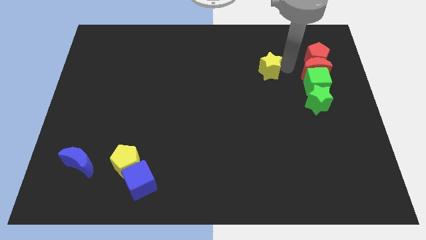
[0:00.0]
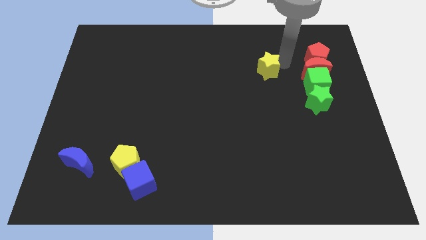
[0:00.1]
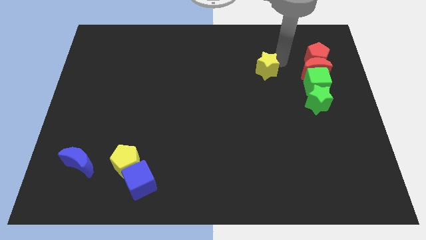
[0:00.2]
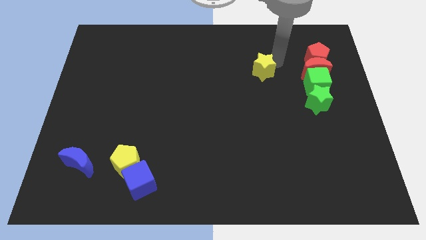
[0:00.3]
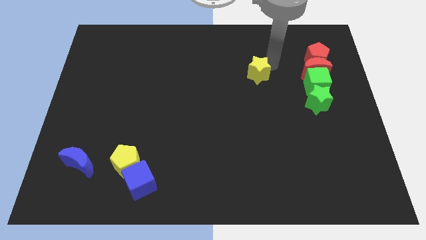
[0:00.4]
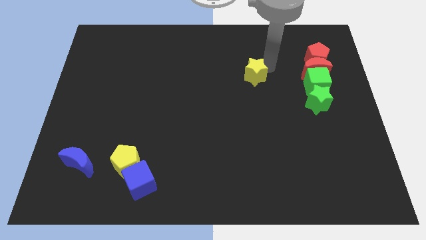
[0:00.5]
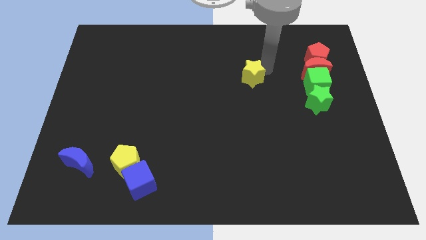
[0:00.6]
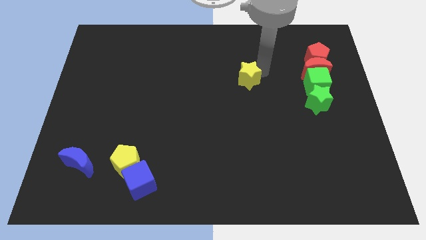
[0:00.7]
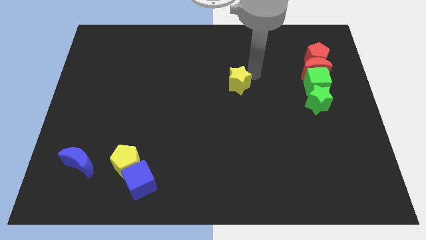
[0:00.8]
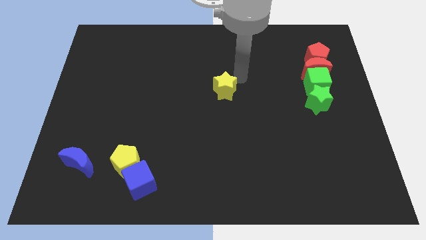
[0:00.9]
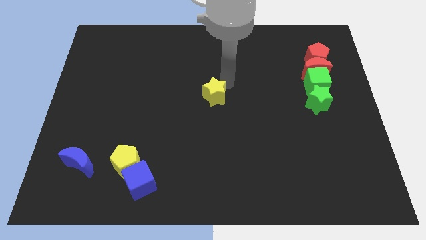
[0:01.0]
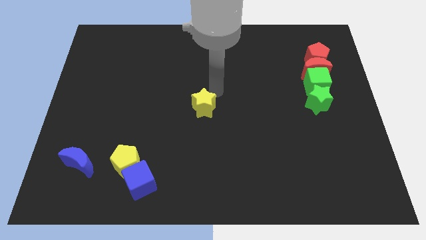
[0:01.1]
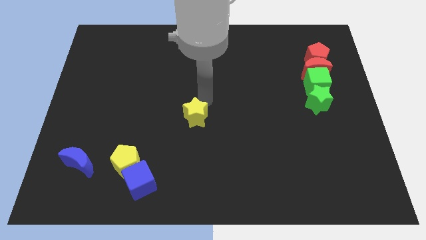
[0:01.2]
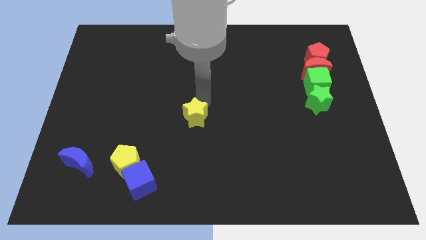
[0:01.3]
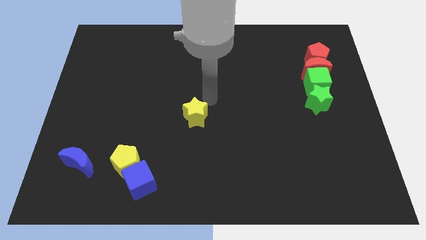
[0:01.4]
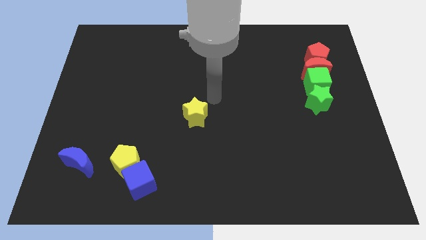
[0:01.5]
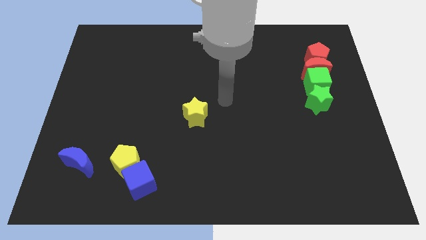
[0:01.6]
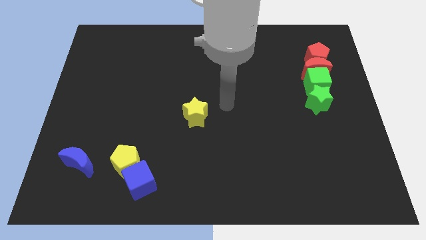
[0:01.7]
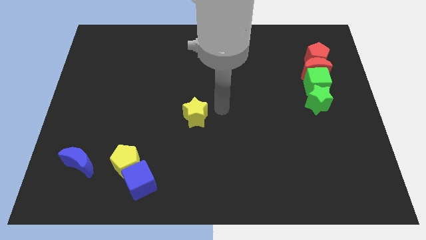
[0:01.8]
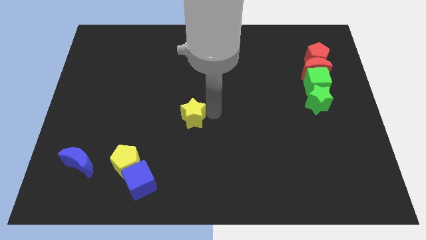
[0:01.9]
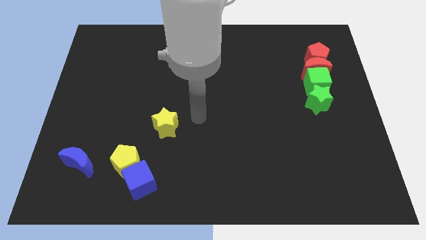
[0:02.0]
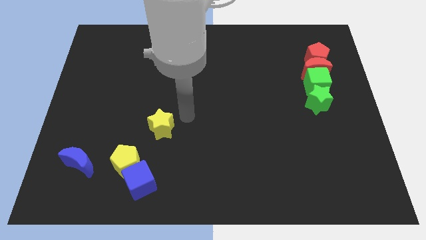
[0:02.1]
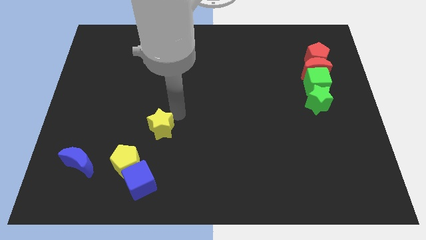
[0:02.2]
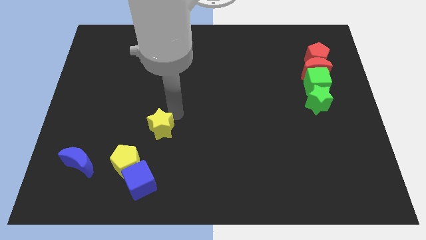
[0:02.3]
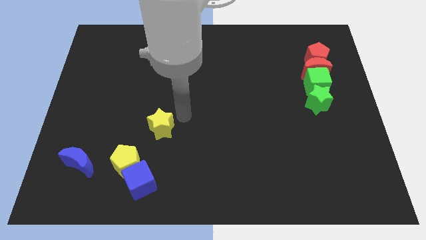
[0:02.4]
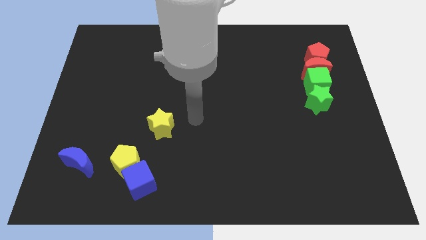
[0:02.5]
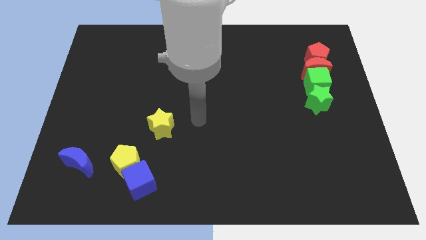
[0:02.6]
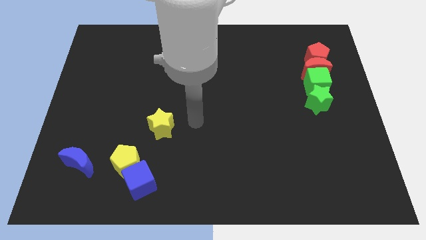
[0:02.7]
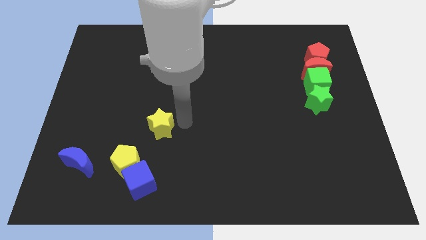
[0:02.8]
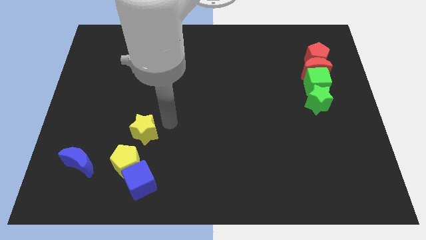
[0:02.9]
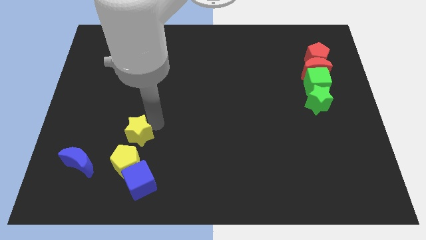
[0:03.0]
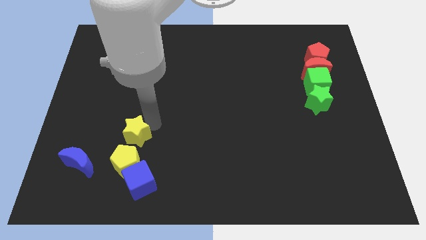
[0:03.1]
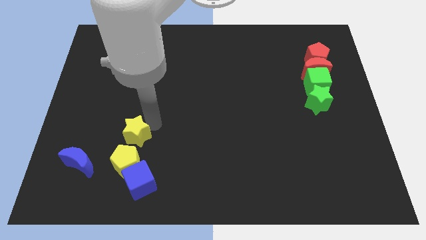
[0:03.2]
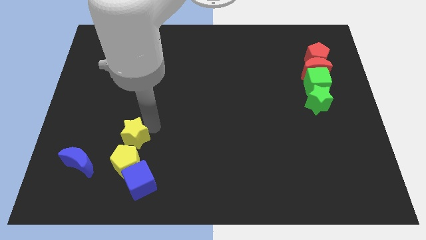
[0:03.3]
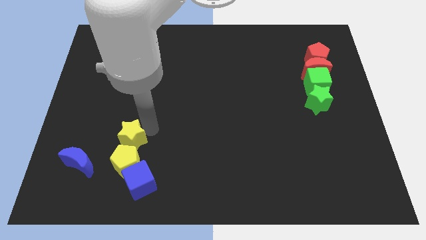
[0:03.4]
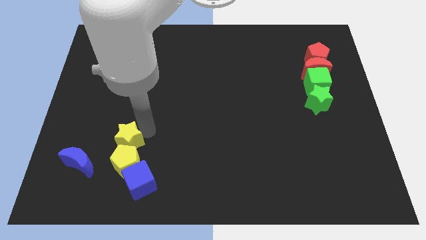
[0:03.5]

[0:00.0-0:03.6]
push yellow star towards yellow pentagon

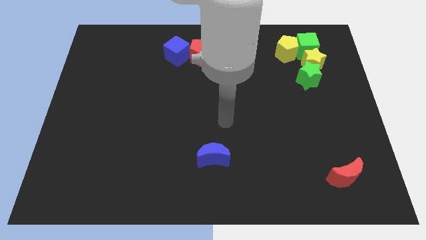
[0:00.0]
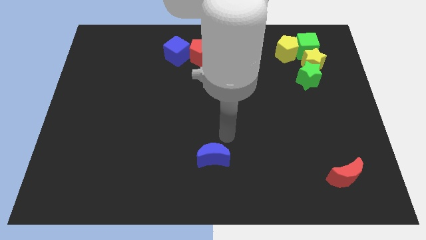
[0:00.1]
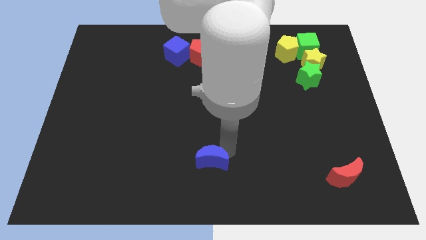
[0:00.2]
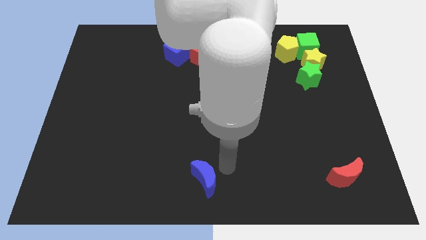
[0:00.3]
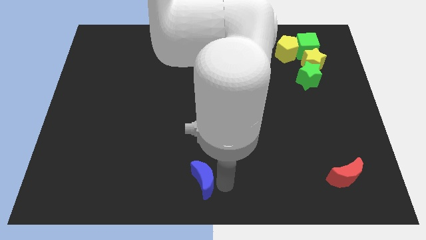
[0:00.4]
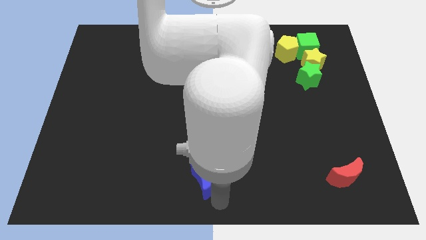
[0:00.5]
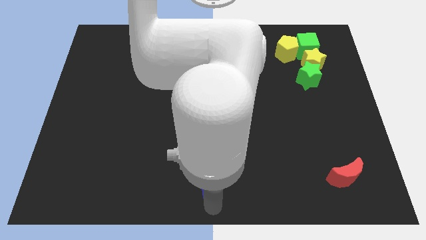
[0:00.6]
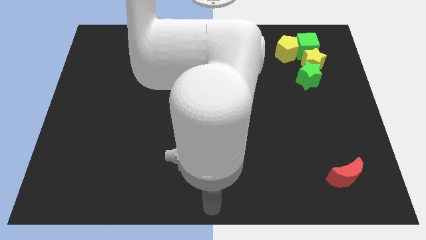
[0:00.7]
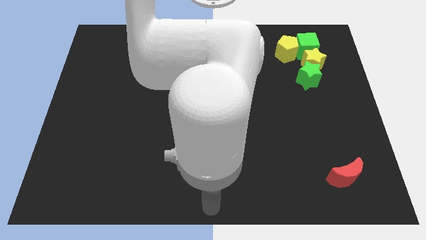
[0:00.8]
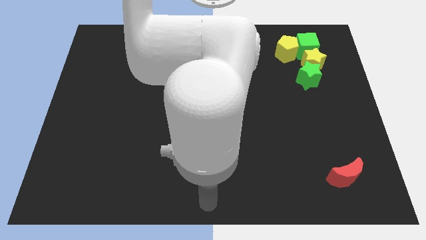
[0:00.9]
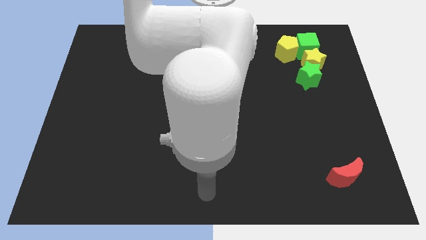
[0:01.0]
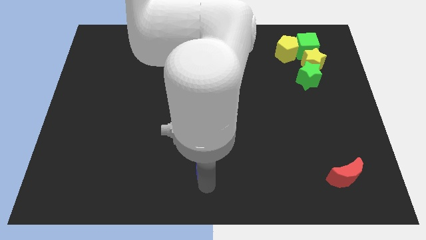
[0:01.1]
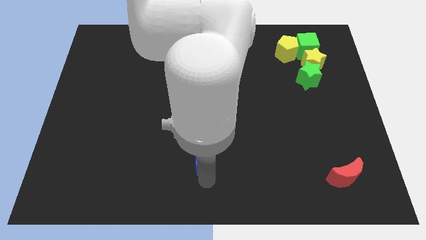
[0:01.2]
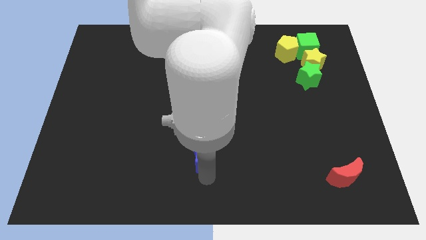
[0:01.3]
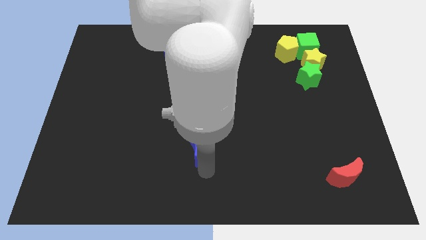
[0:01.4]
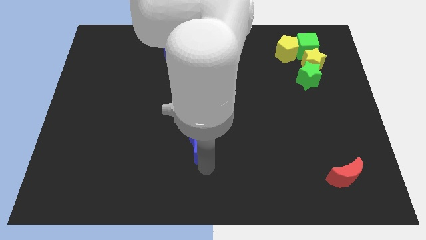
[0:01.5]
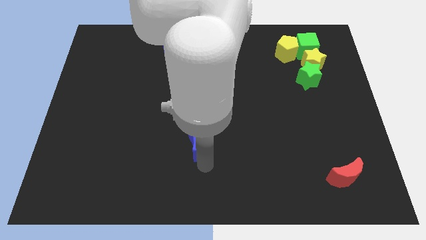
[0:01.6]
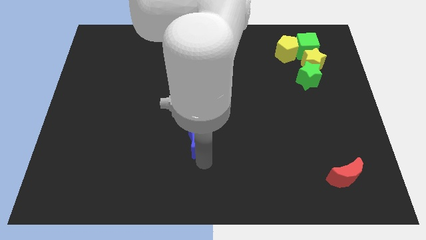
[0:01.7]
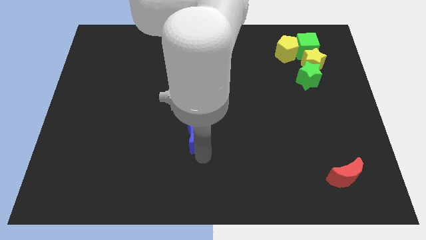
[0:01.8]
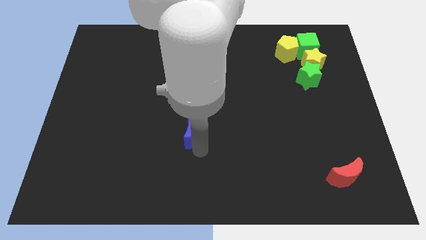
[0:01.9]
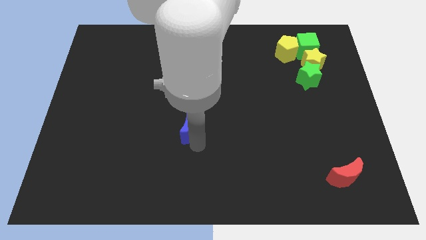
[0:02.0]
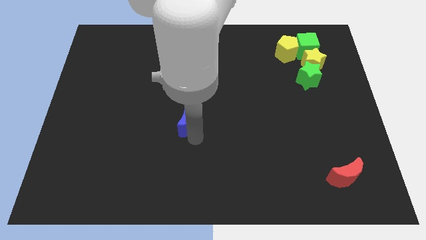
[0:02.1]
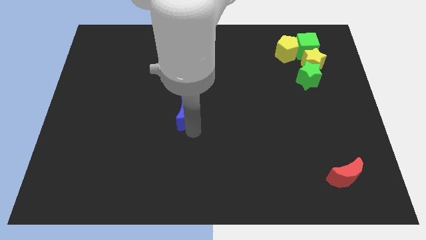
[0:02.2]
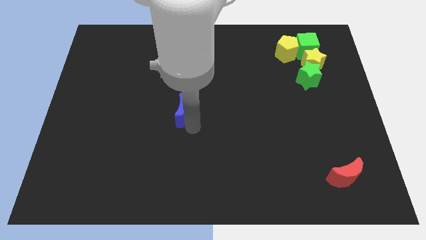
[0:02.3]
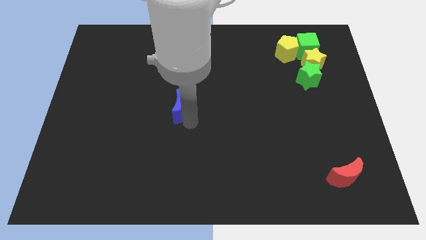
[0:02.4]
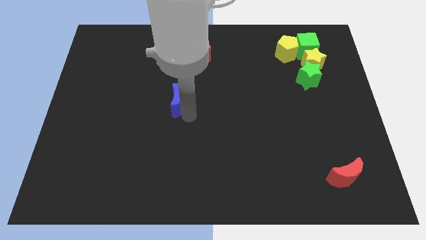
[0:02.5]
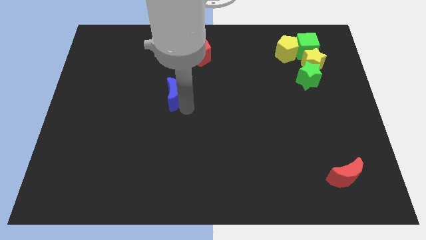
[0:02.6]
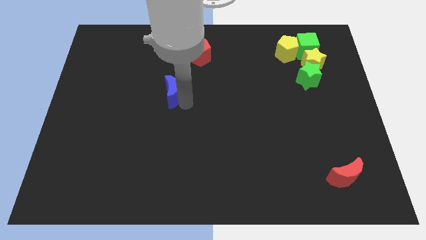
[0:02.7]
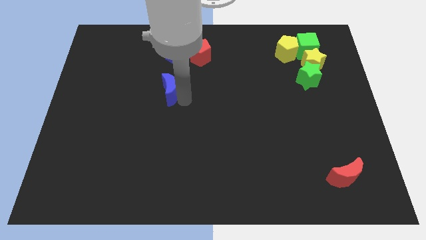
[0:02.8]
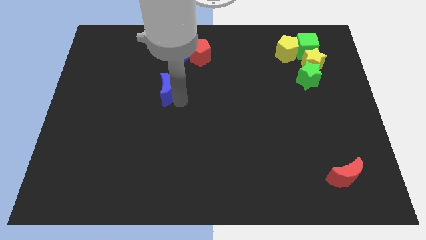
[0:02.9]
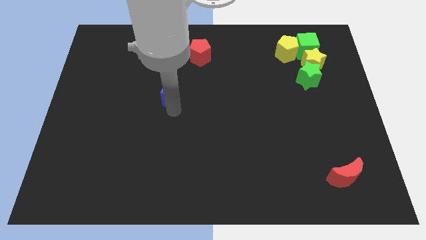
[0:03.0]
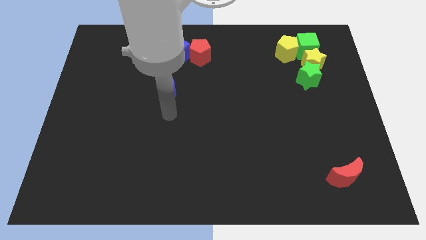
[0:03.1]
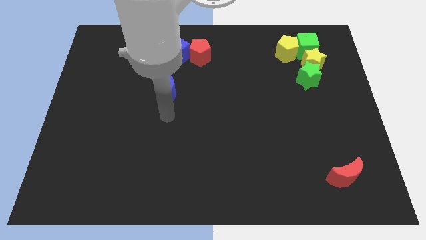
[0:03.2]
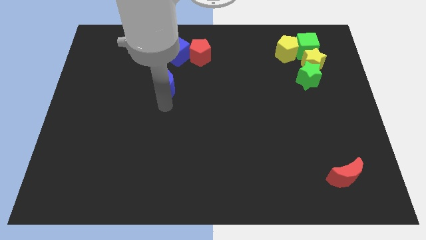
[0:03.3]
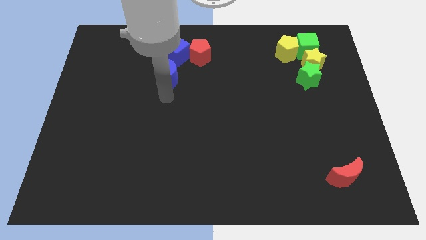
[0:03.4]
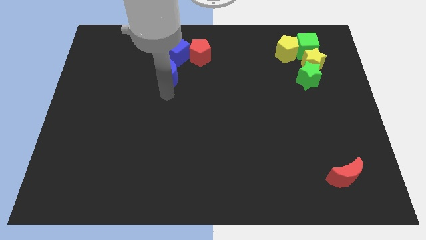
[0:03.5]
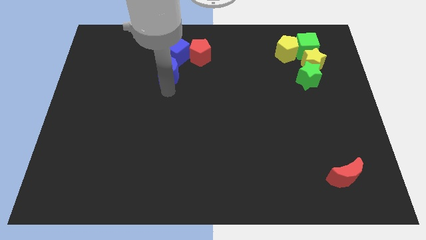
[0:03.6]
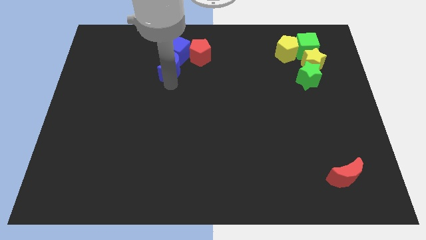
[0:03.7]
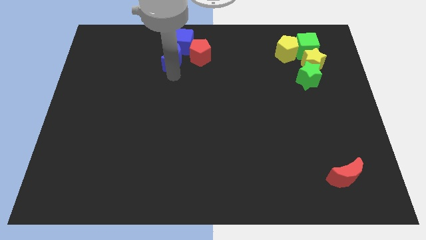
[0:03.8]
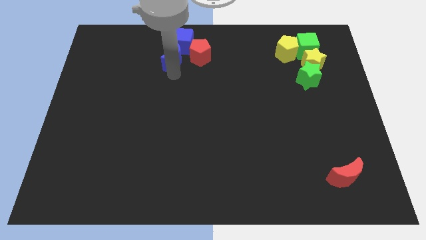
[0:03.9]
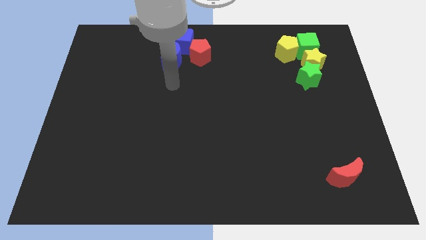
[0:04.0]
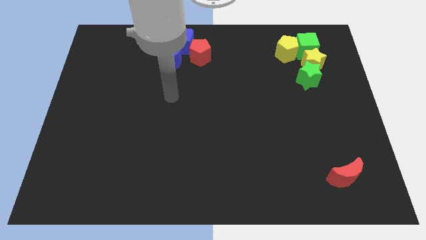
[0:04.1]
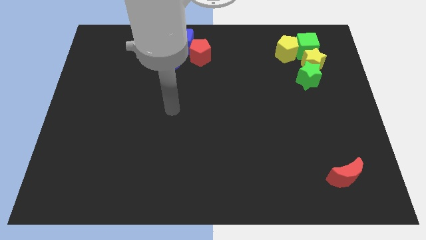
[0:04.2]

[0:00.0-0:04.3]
push the blue crescent into the blue cube

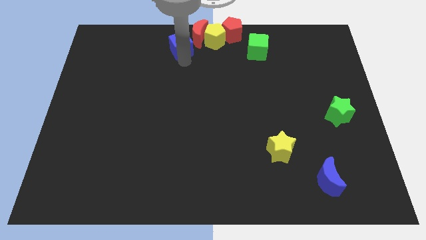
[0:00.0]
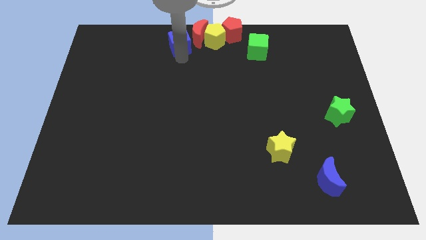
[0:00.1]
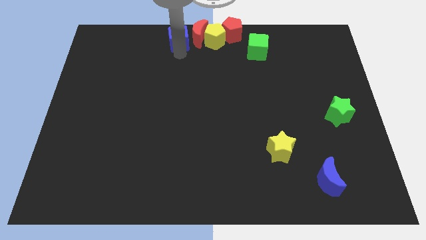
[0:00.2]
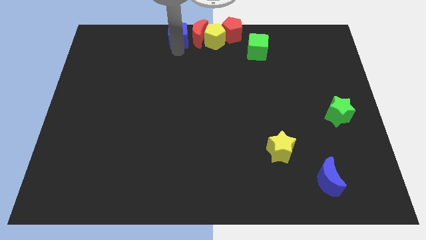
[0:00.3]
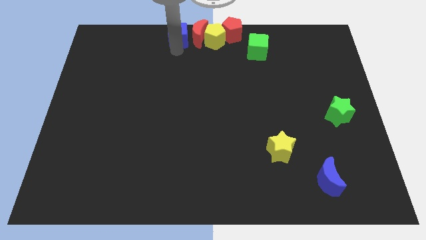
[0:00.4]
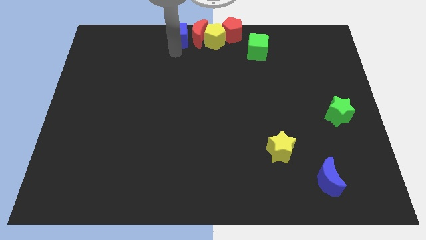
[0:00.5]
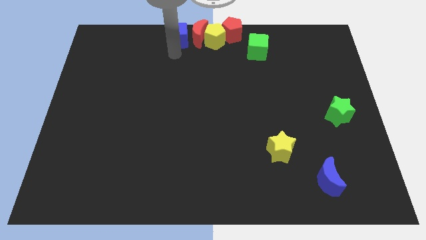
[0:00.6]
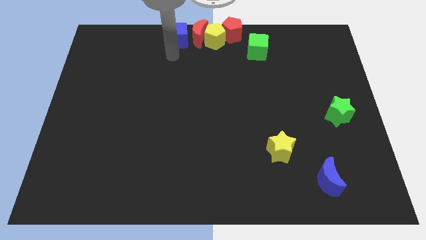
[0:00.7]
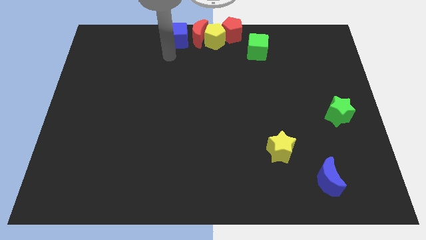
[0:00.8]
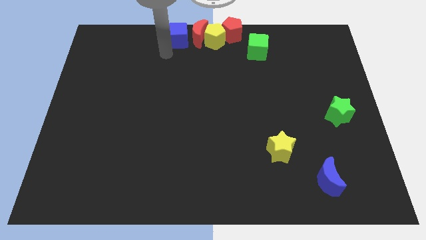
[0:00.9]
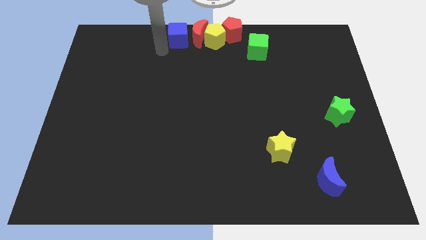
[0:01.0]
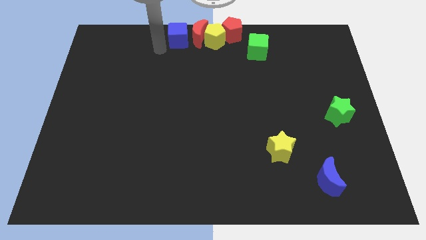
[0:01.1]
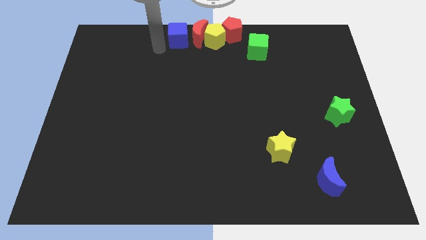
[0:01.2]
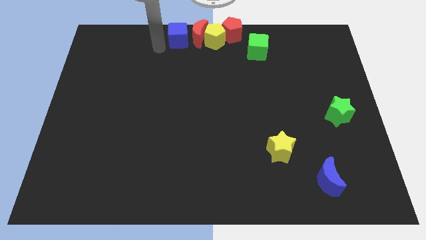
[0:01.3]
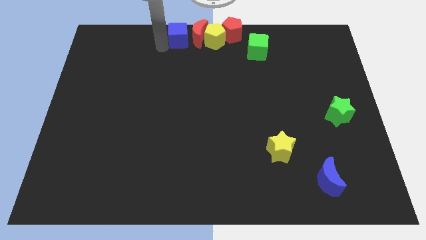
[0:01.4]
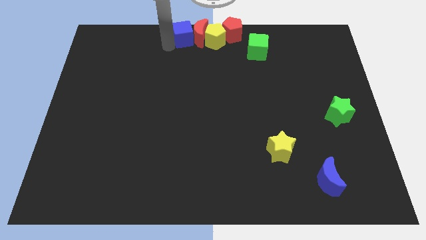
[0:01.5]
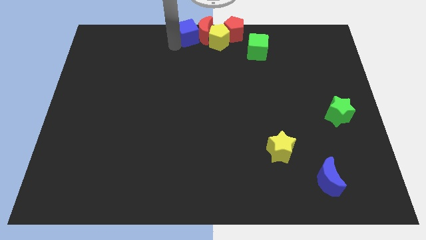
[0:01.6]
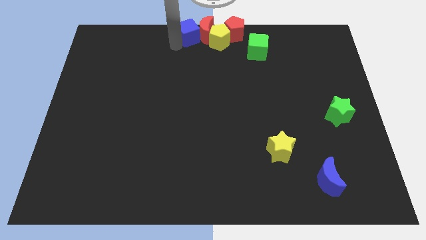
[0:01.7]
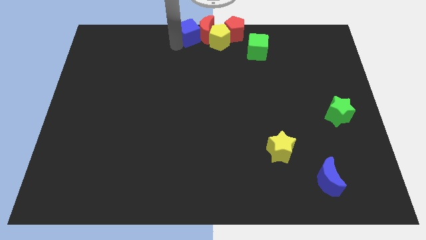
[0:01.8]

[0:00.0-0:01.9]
move the blue cube to the left of the red crescent
